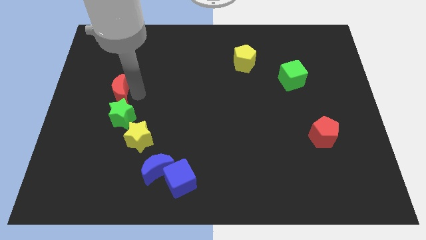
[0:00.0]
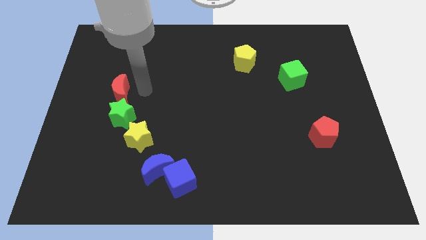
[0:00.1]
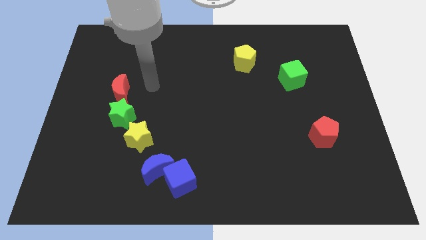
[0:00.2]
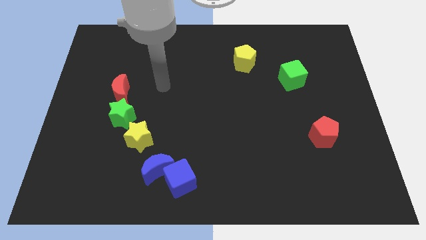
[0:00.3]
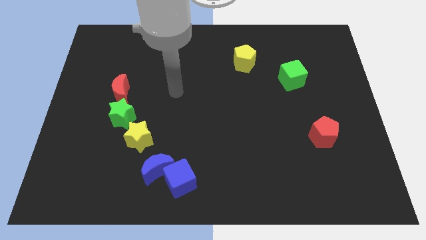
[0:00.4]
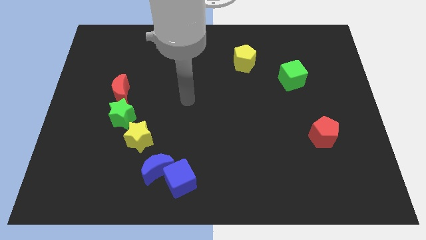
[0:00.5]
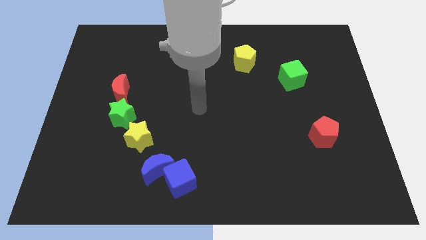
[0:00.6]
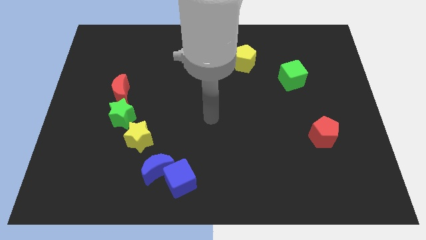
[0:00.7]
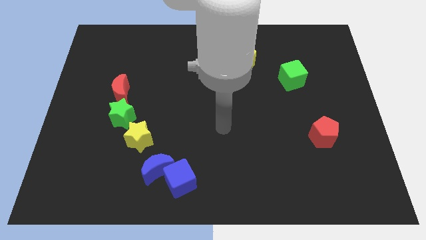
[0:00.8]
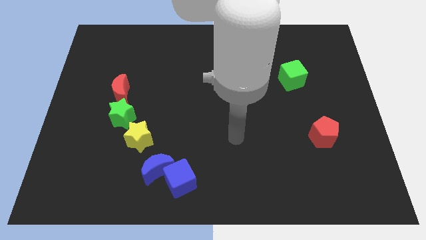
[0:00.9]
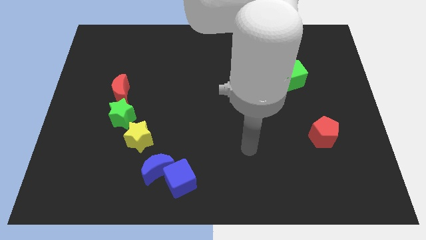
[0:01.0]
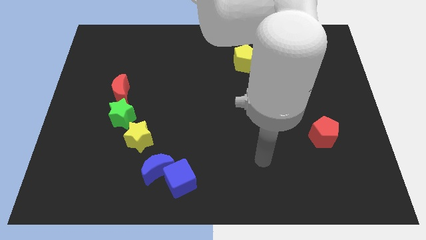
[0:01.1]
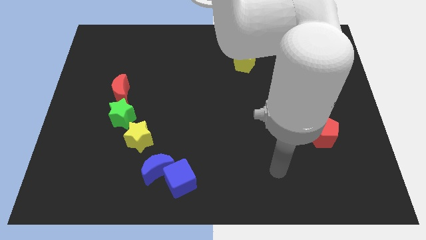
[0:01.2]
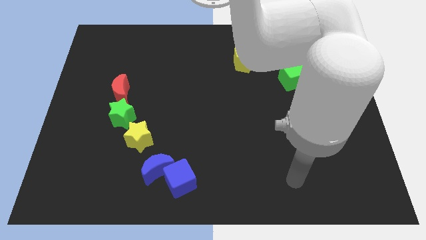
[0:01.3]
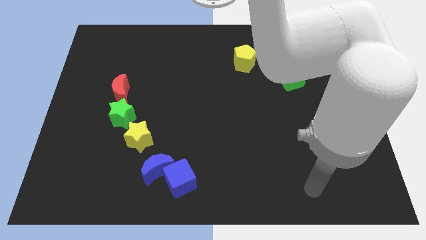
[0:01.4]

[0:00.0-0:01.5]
move your arm towards the bottom right corner of the board

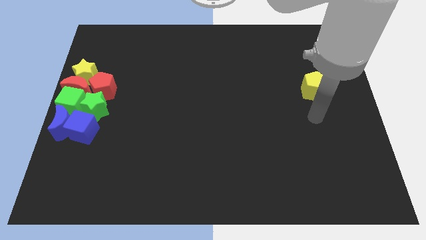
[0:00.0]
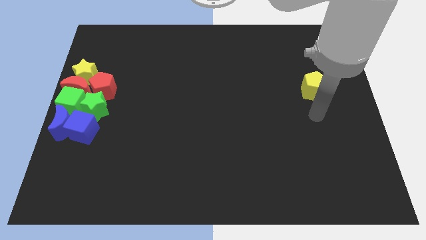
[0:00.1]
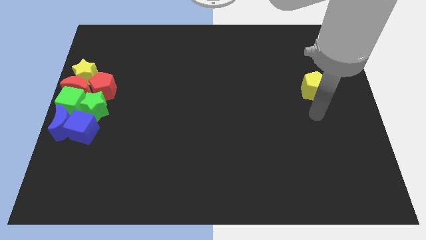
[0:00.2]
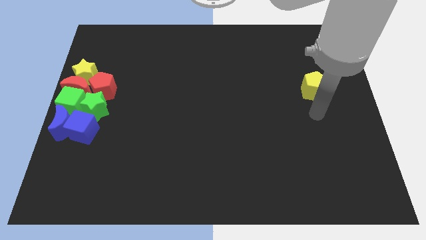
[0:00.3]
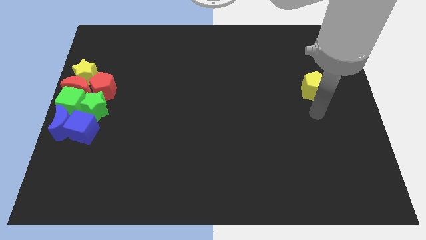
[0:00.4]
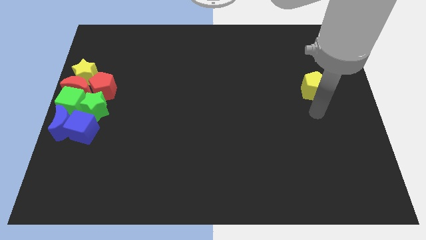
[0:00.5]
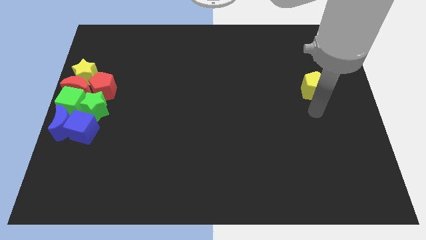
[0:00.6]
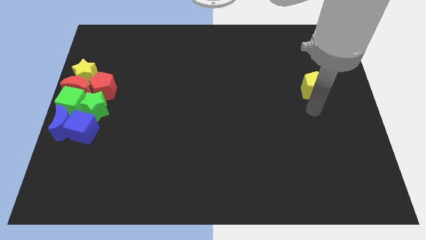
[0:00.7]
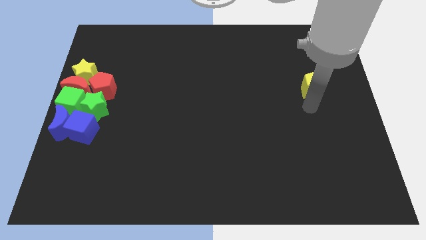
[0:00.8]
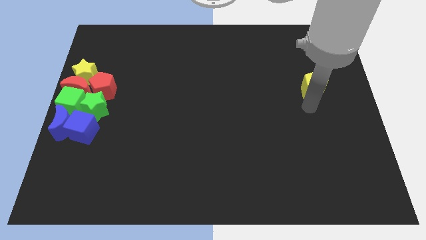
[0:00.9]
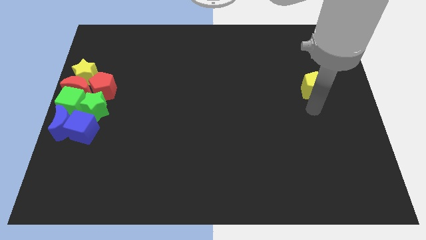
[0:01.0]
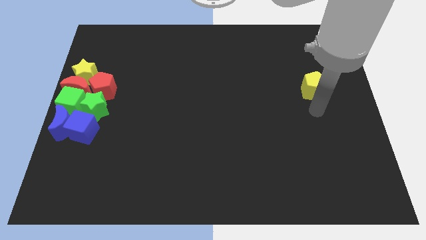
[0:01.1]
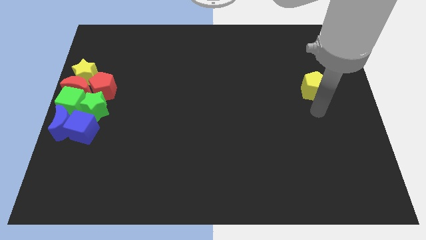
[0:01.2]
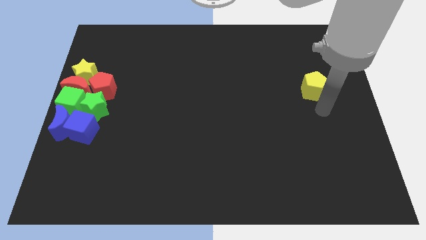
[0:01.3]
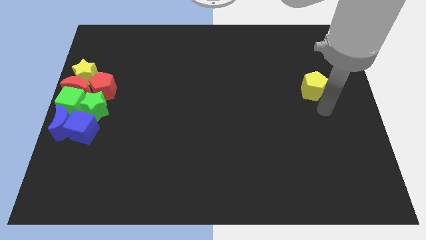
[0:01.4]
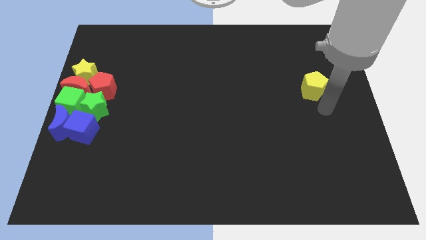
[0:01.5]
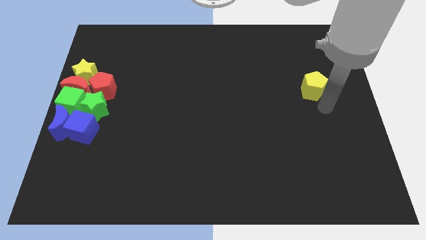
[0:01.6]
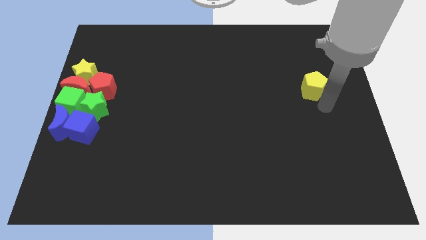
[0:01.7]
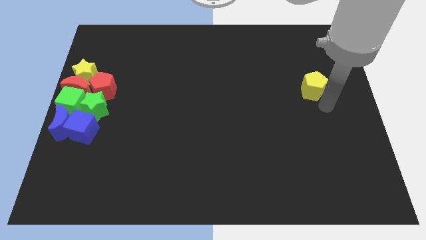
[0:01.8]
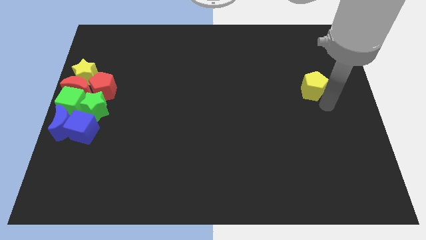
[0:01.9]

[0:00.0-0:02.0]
move your arm close to the yellow pentagon

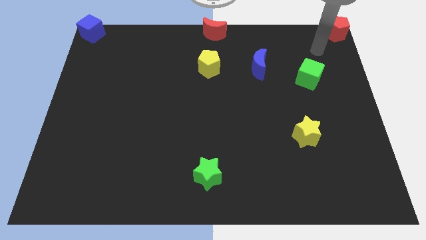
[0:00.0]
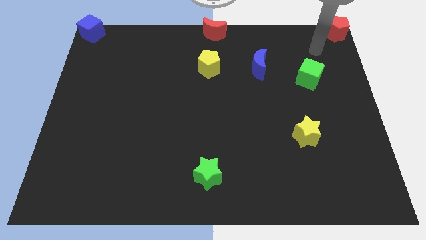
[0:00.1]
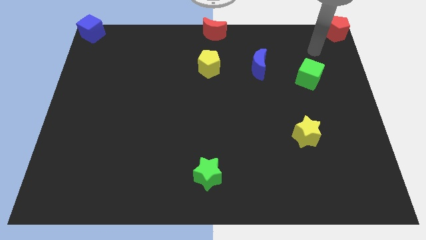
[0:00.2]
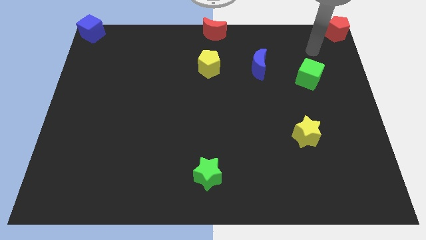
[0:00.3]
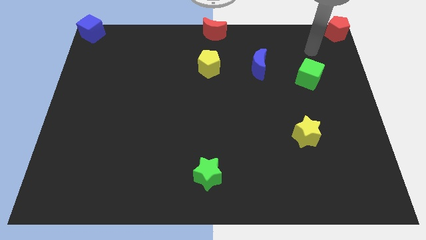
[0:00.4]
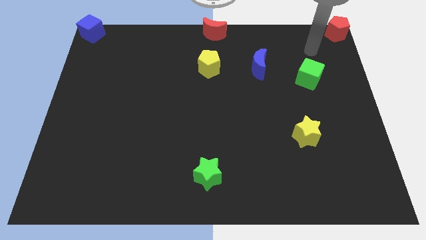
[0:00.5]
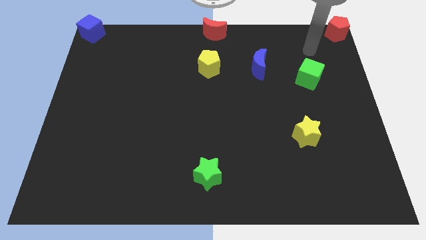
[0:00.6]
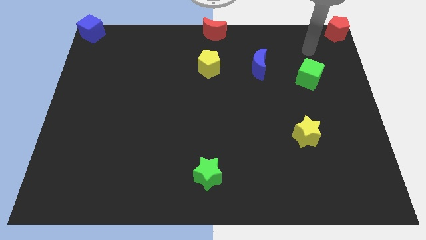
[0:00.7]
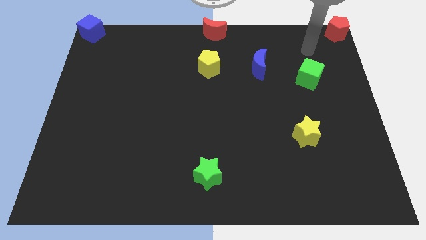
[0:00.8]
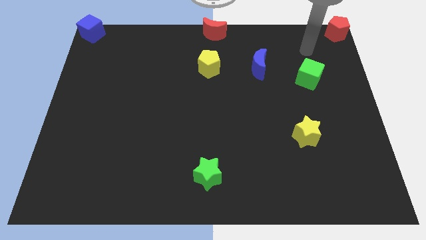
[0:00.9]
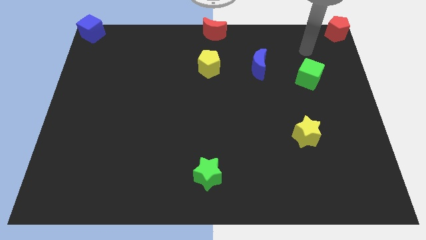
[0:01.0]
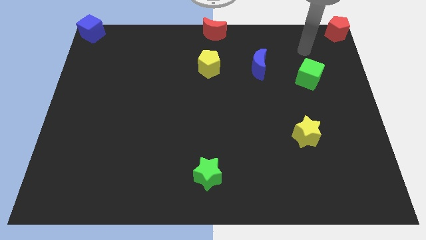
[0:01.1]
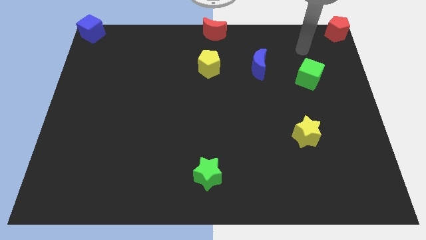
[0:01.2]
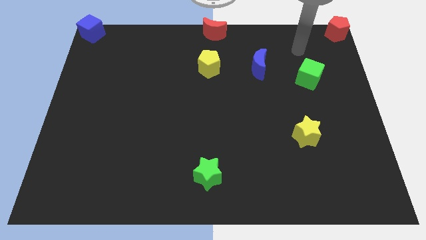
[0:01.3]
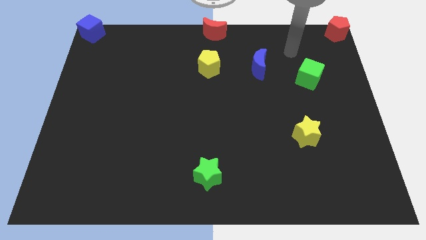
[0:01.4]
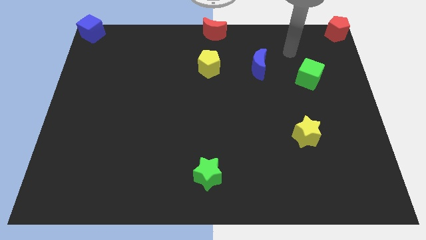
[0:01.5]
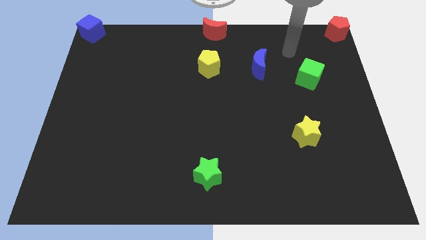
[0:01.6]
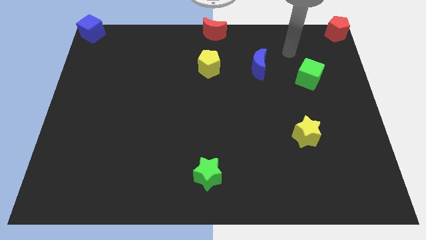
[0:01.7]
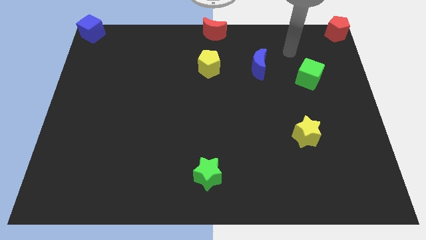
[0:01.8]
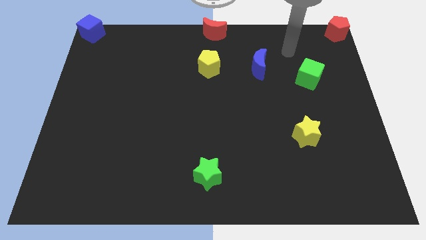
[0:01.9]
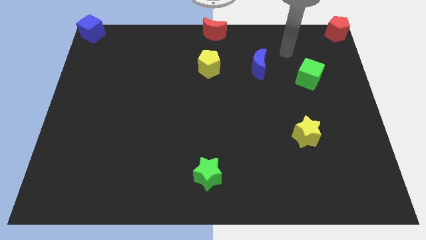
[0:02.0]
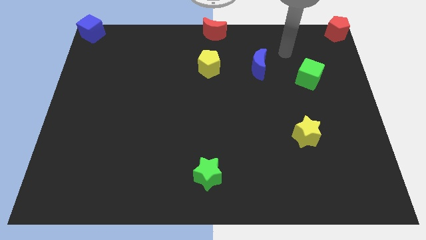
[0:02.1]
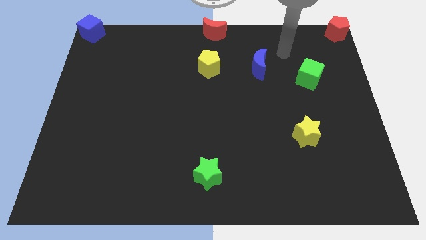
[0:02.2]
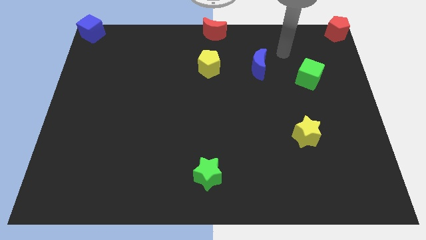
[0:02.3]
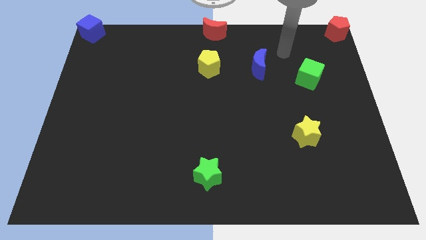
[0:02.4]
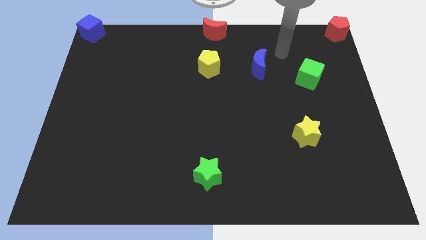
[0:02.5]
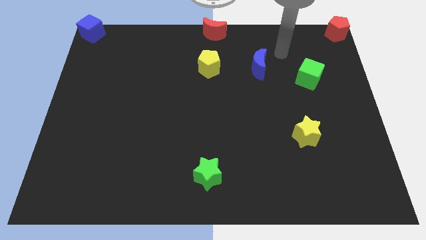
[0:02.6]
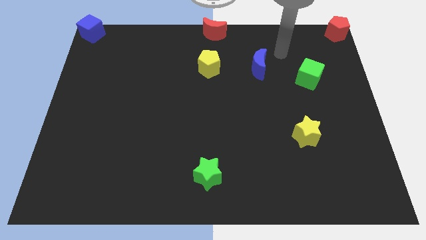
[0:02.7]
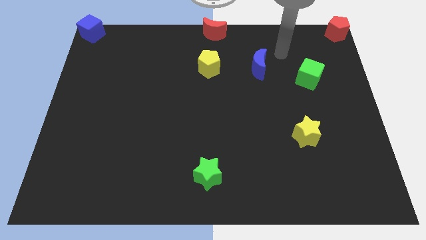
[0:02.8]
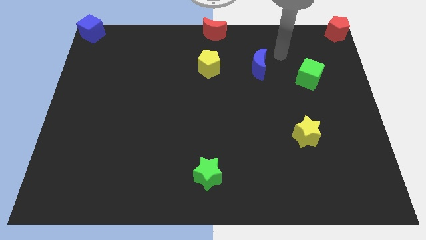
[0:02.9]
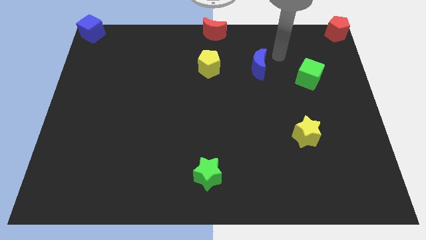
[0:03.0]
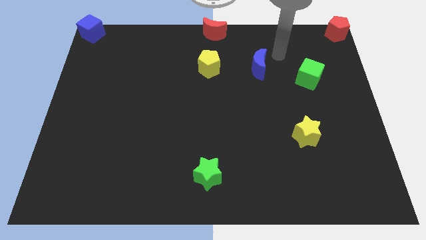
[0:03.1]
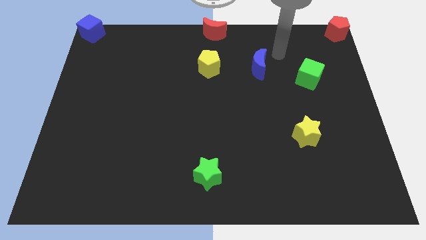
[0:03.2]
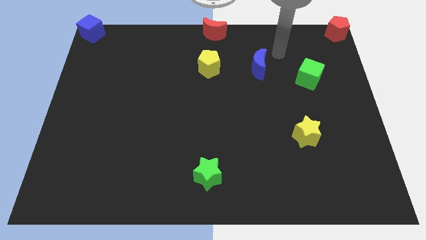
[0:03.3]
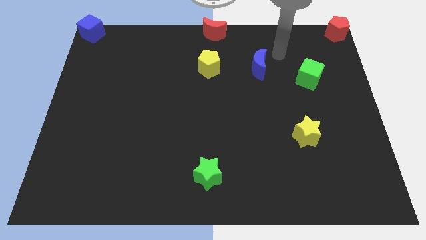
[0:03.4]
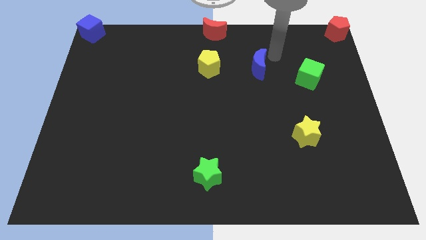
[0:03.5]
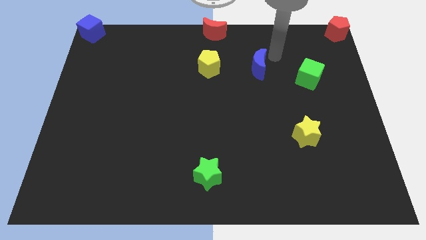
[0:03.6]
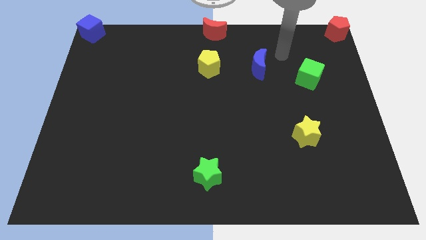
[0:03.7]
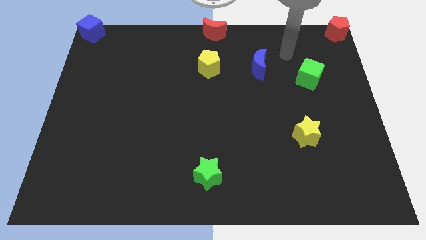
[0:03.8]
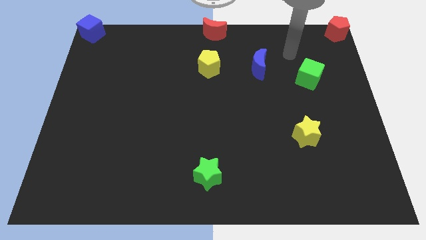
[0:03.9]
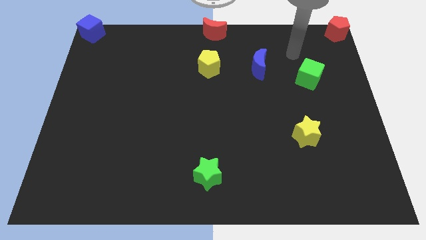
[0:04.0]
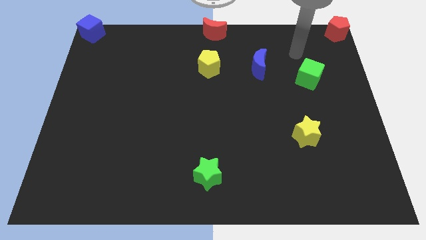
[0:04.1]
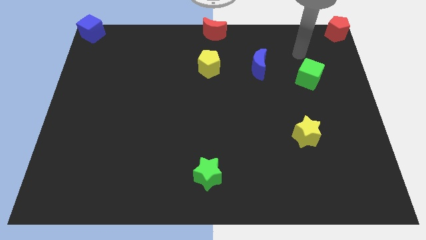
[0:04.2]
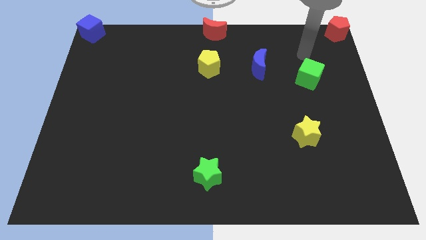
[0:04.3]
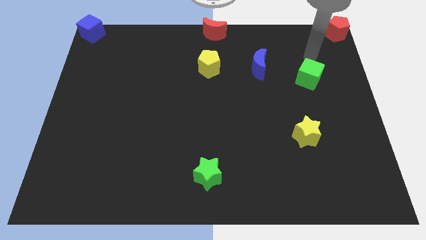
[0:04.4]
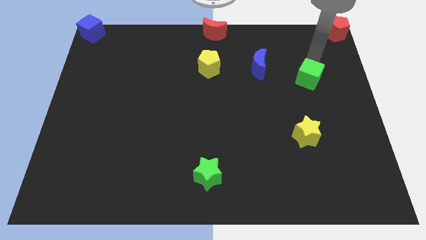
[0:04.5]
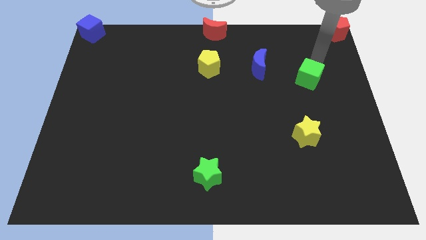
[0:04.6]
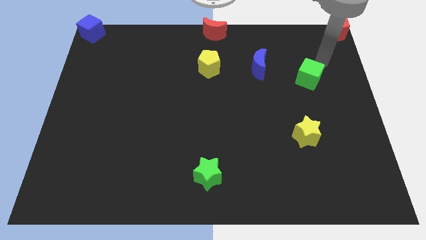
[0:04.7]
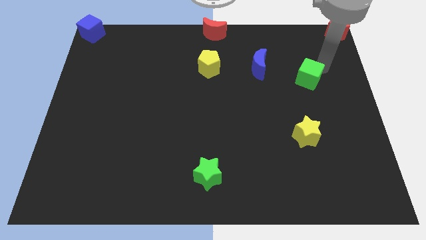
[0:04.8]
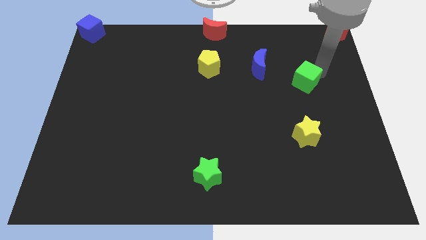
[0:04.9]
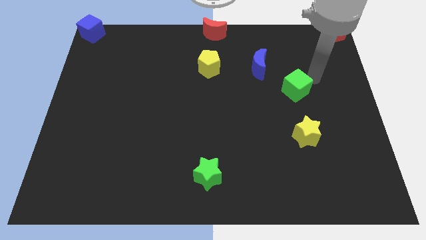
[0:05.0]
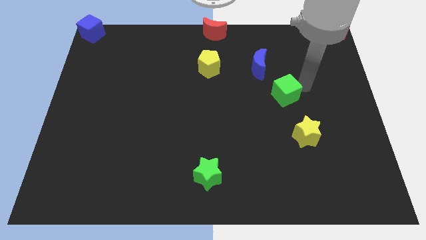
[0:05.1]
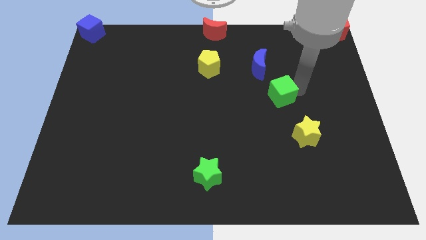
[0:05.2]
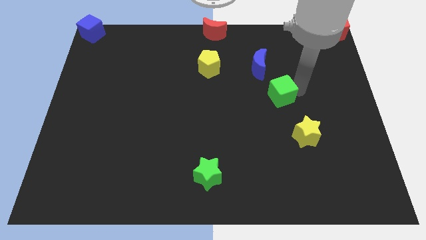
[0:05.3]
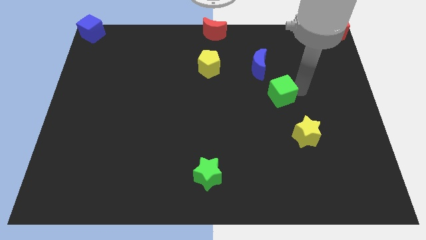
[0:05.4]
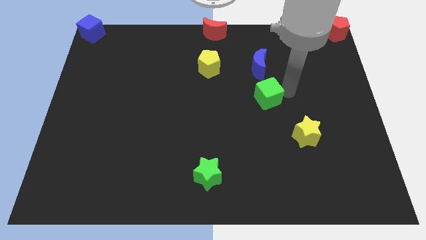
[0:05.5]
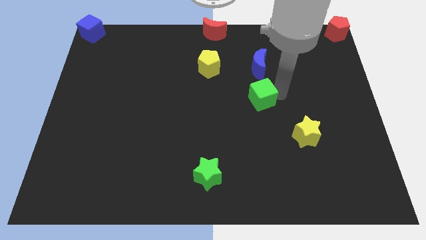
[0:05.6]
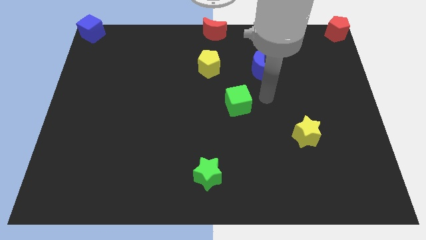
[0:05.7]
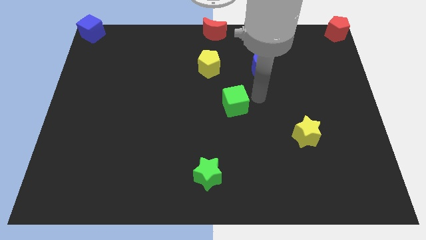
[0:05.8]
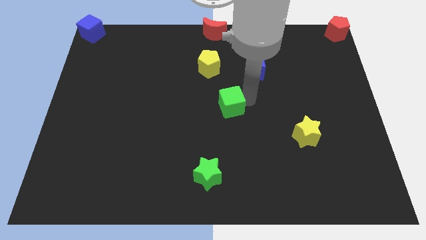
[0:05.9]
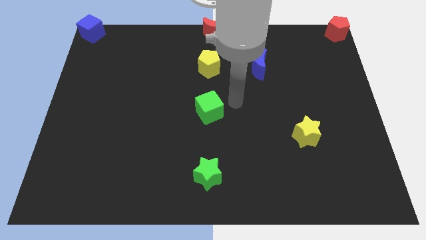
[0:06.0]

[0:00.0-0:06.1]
place the green cube in between the yellow pentagon and green star
